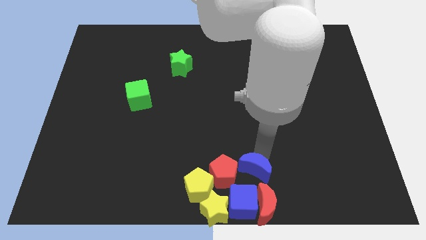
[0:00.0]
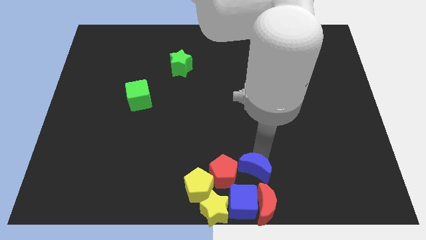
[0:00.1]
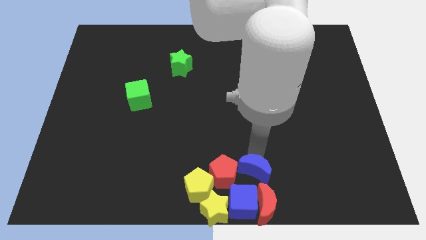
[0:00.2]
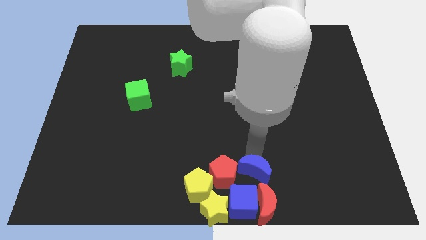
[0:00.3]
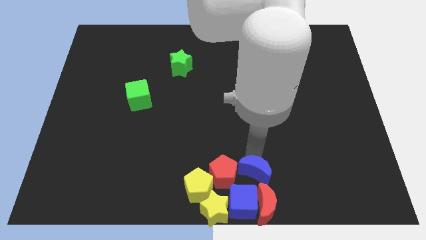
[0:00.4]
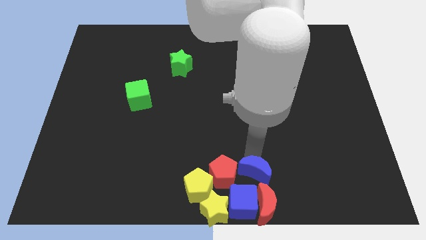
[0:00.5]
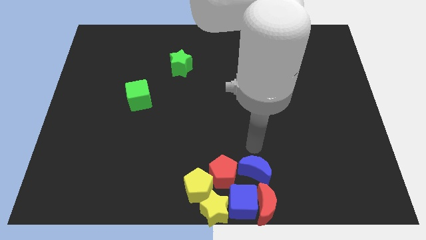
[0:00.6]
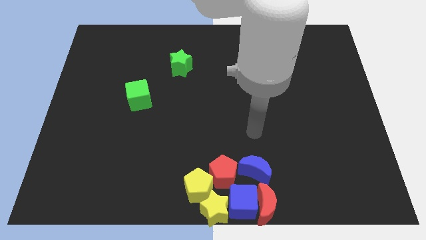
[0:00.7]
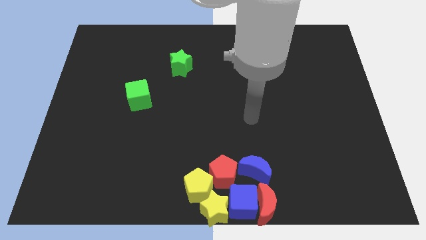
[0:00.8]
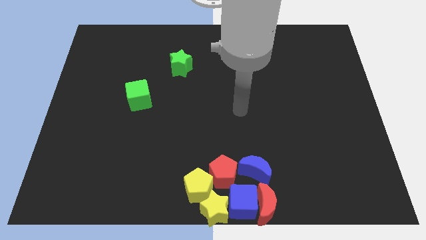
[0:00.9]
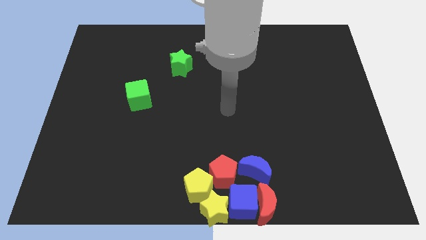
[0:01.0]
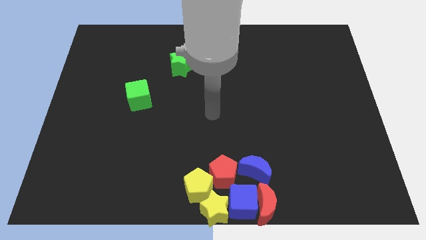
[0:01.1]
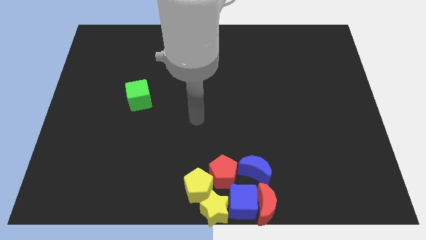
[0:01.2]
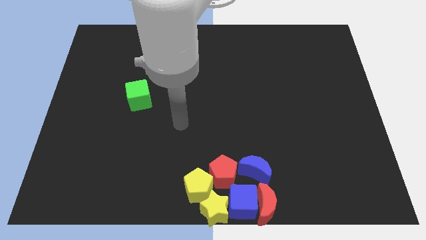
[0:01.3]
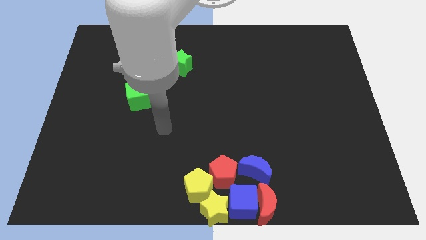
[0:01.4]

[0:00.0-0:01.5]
move your arm away from blue moon

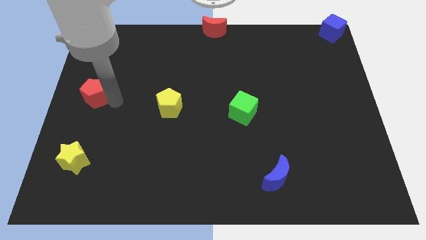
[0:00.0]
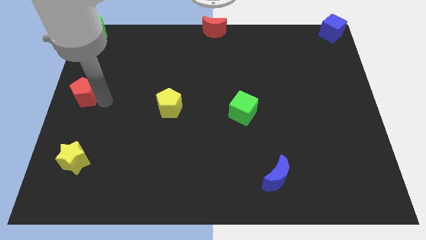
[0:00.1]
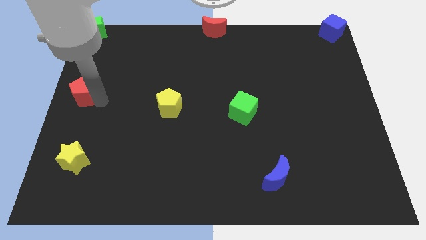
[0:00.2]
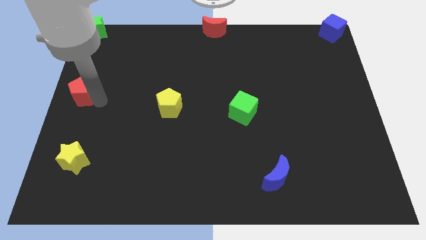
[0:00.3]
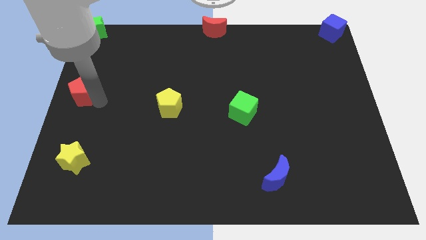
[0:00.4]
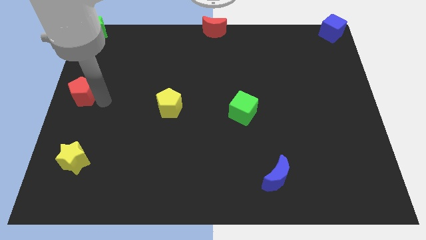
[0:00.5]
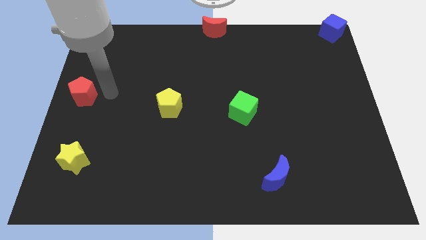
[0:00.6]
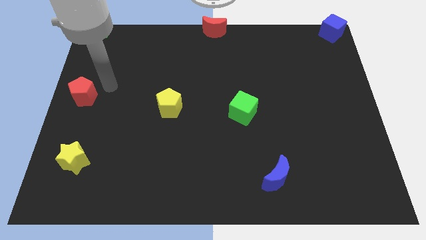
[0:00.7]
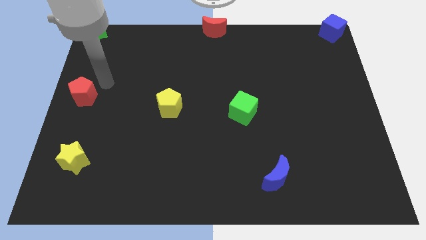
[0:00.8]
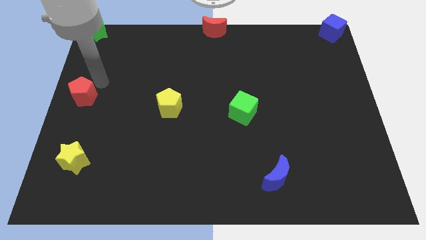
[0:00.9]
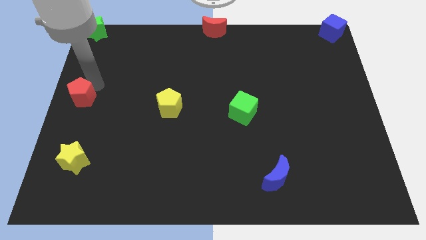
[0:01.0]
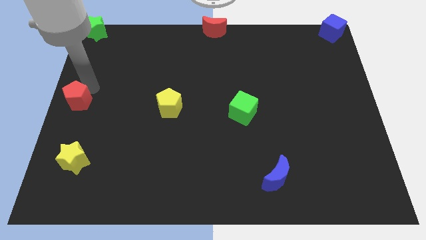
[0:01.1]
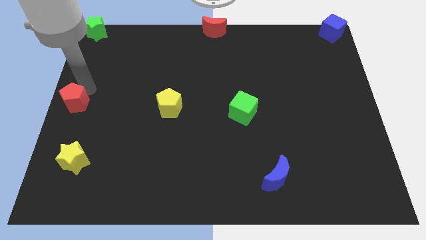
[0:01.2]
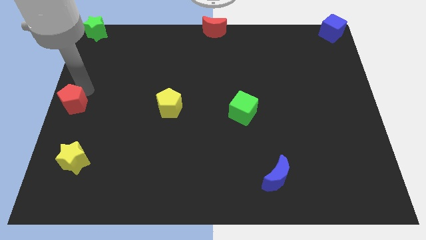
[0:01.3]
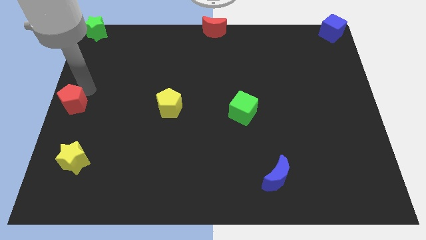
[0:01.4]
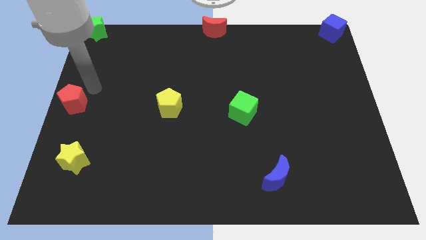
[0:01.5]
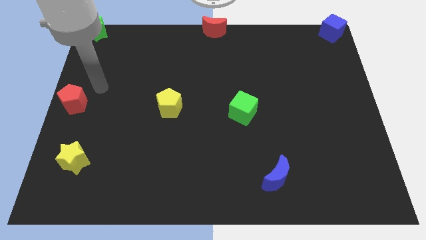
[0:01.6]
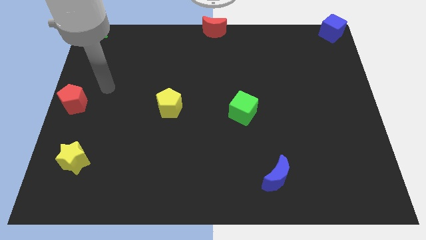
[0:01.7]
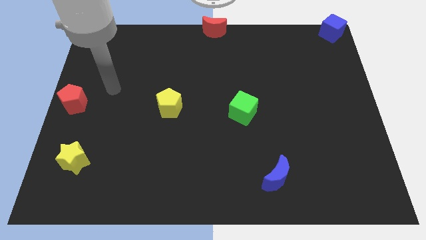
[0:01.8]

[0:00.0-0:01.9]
put the red pentagon at the center left of the board

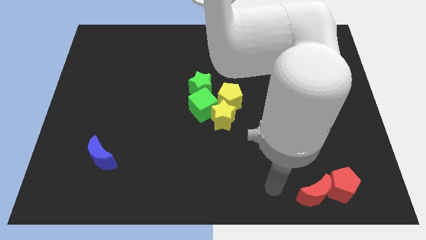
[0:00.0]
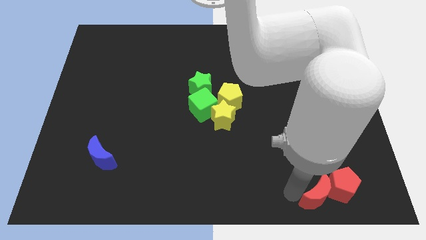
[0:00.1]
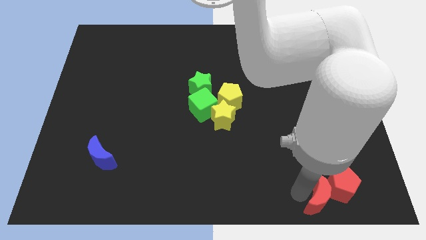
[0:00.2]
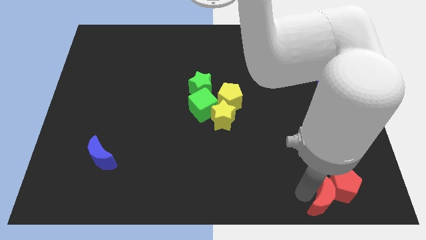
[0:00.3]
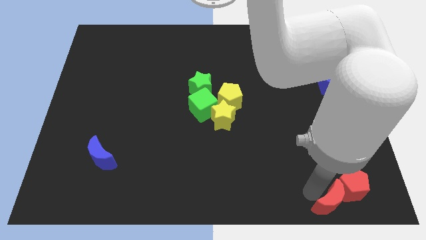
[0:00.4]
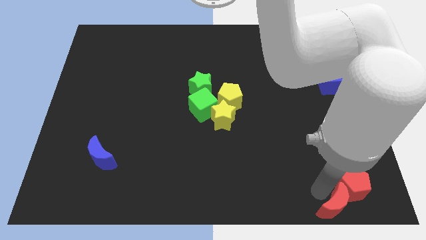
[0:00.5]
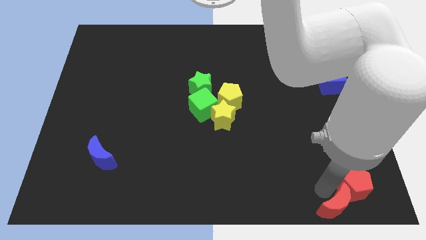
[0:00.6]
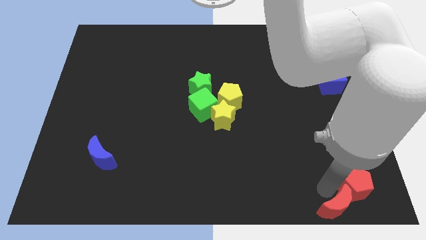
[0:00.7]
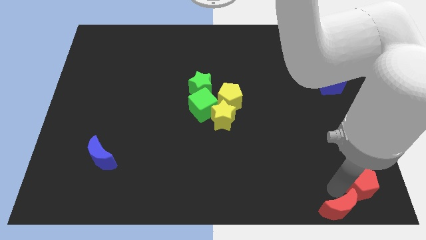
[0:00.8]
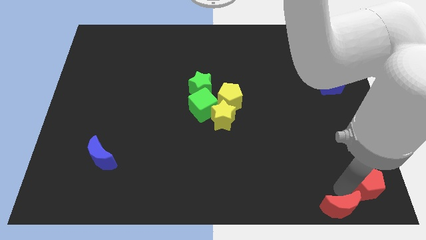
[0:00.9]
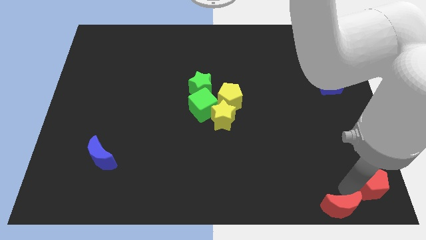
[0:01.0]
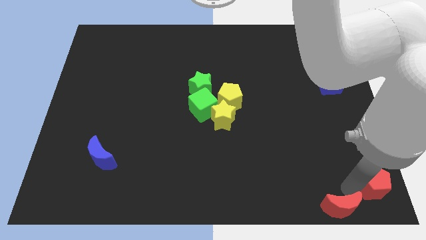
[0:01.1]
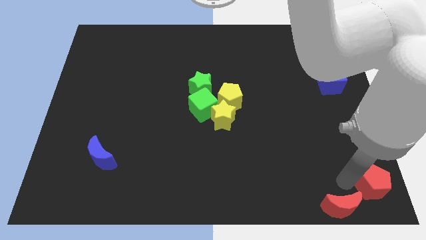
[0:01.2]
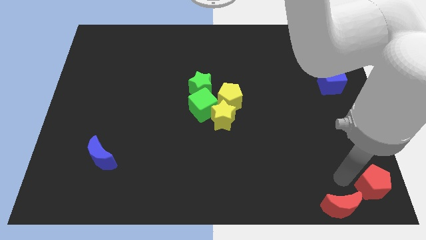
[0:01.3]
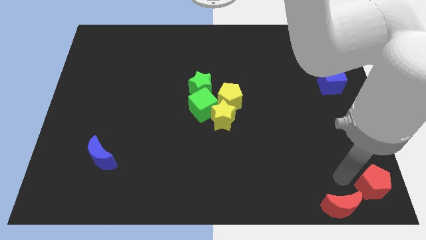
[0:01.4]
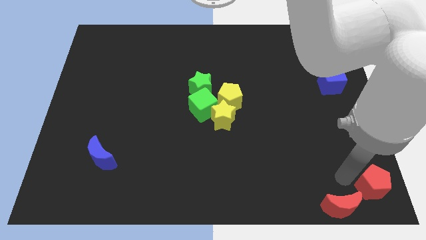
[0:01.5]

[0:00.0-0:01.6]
slightly move the red crescent along with the red pentagon right side of the board

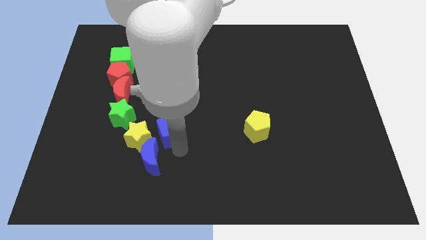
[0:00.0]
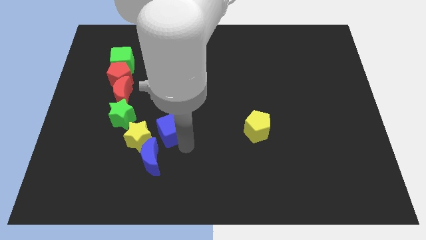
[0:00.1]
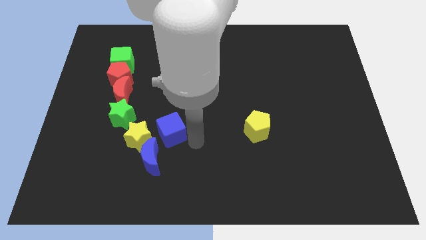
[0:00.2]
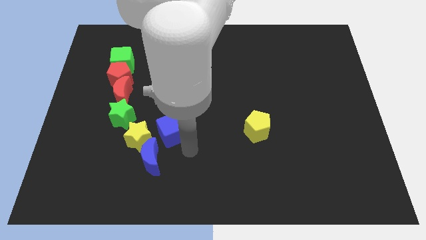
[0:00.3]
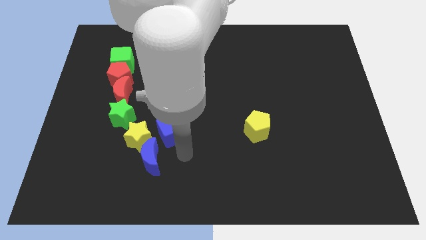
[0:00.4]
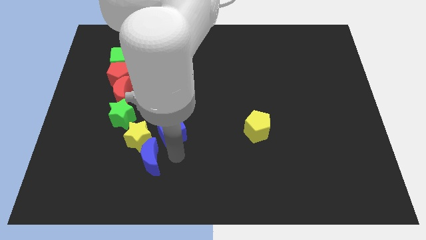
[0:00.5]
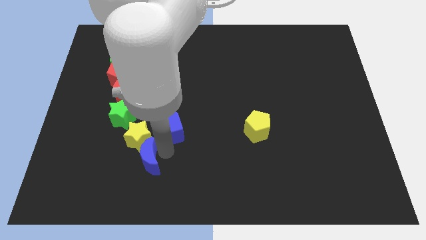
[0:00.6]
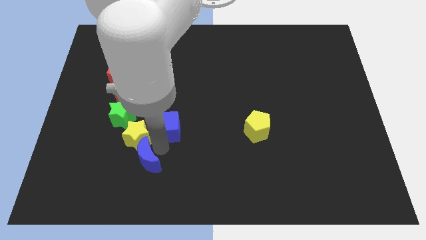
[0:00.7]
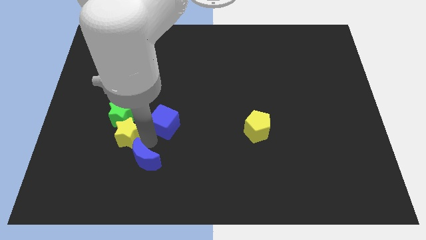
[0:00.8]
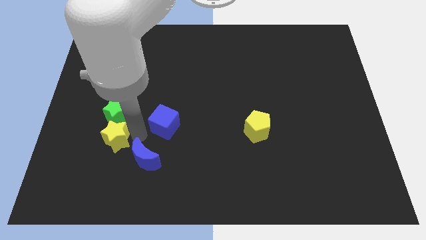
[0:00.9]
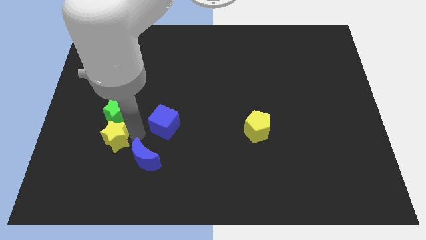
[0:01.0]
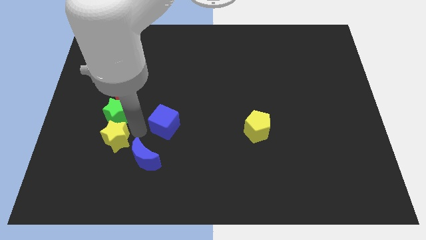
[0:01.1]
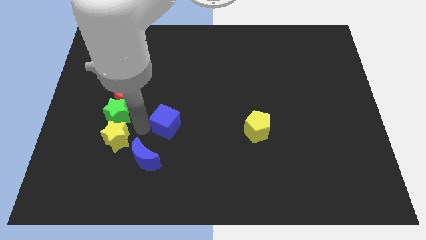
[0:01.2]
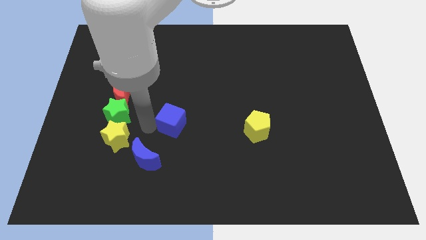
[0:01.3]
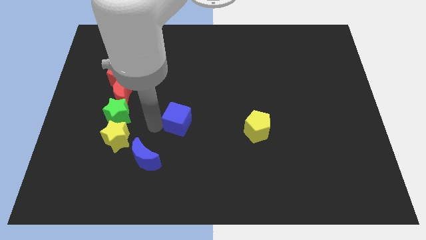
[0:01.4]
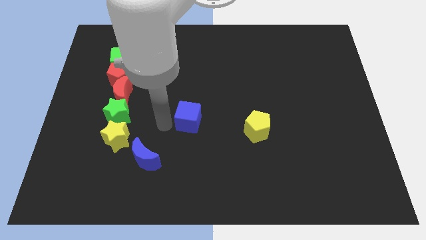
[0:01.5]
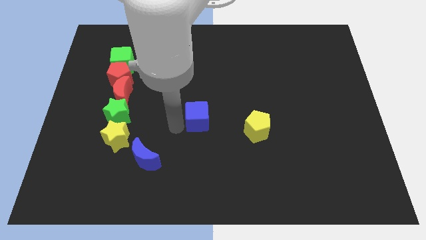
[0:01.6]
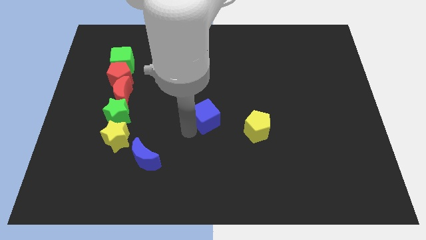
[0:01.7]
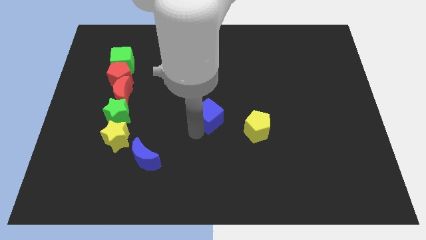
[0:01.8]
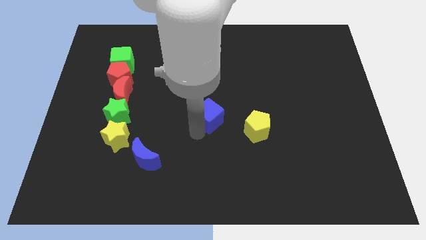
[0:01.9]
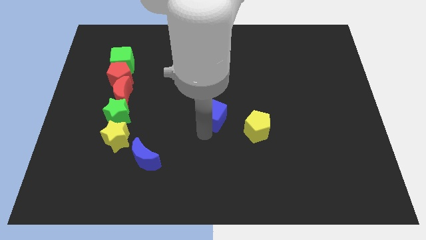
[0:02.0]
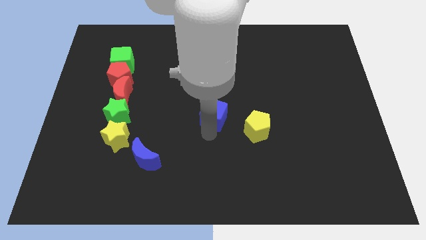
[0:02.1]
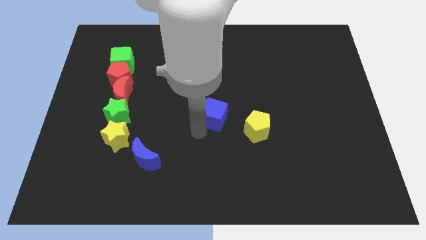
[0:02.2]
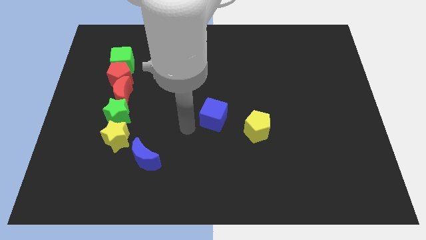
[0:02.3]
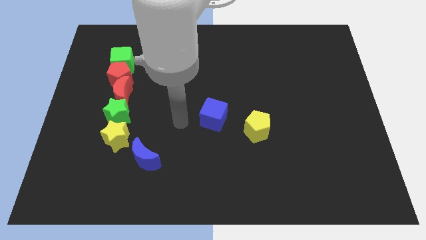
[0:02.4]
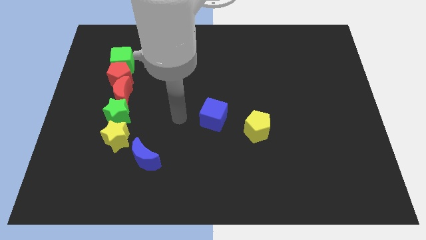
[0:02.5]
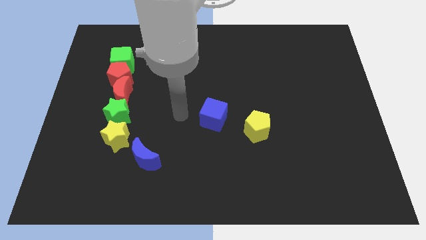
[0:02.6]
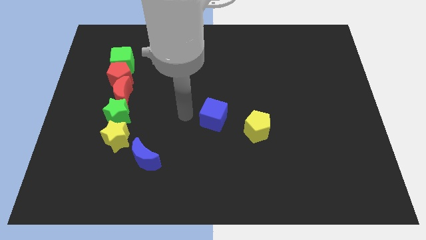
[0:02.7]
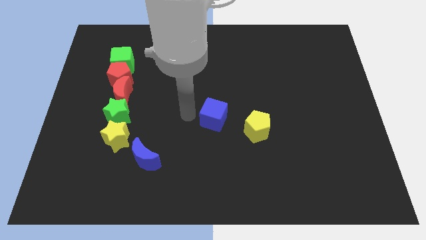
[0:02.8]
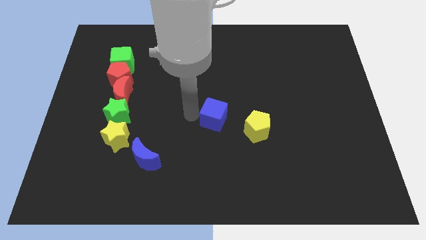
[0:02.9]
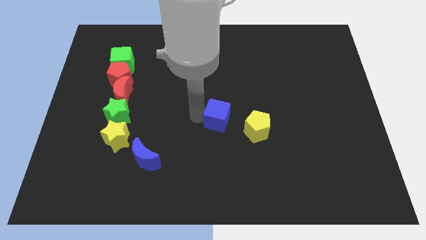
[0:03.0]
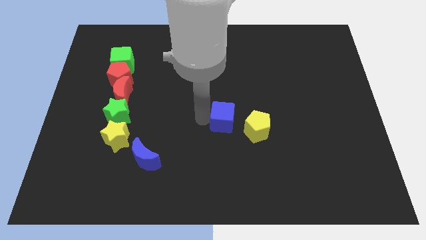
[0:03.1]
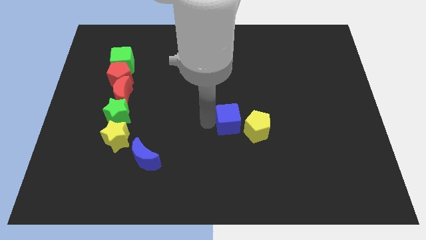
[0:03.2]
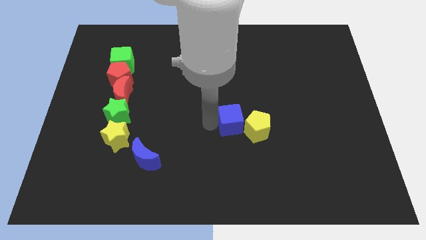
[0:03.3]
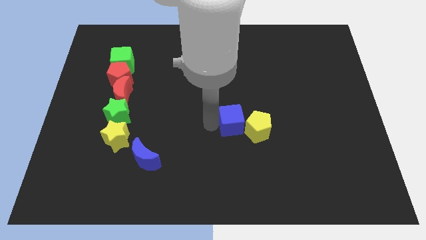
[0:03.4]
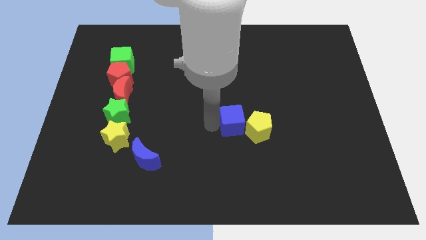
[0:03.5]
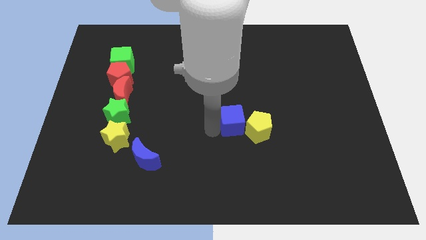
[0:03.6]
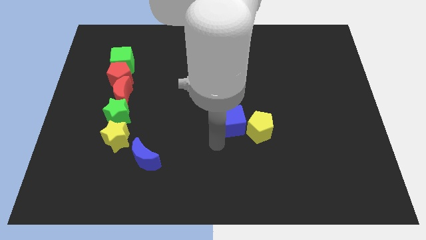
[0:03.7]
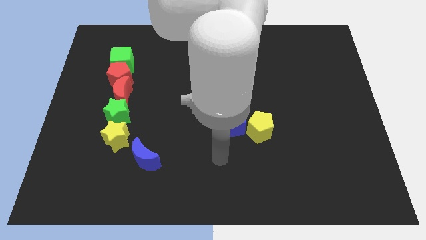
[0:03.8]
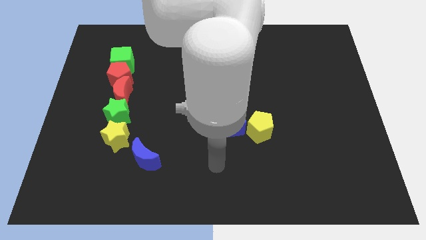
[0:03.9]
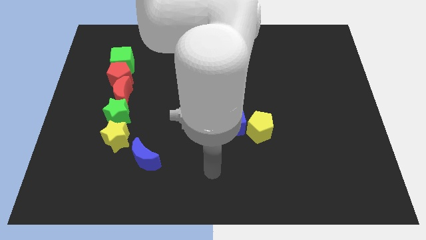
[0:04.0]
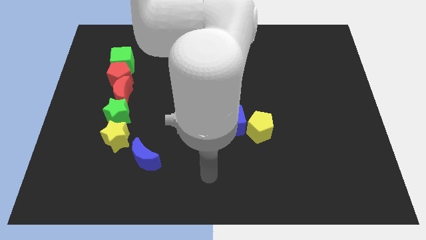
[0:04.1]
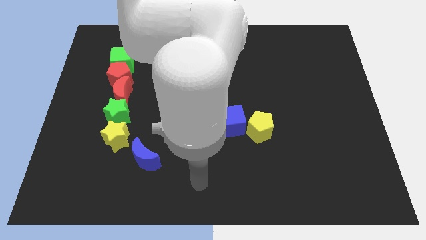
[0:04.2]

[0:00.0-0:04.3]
push the blue cube to the left of the yellow pentagon
